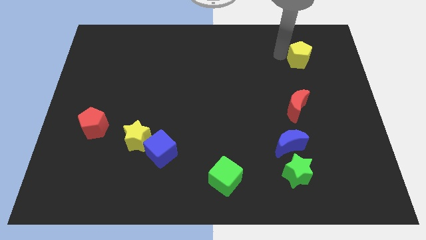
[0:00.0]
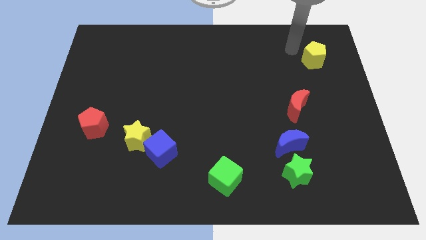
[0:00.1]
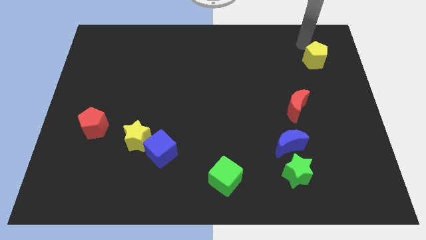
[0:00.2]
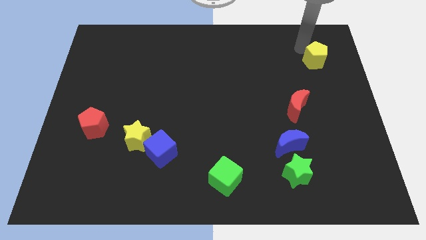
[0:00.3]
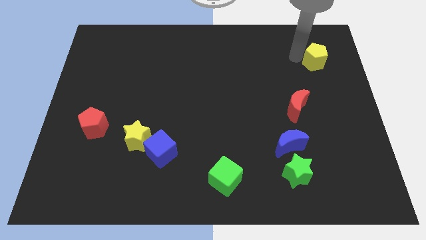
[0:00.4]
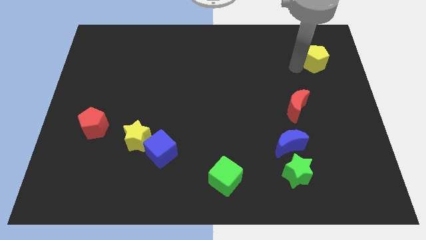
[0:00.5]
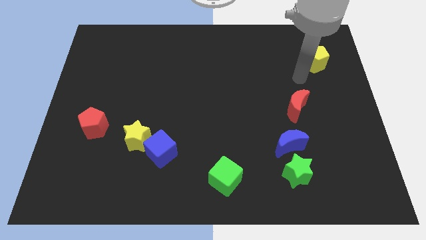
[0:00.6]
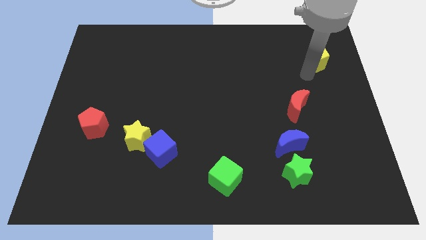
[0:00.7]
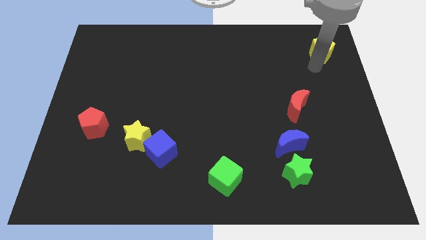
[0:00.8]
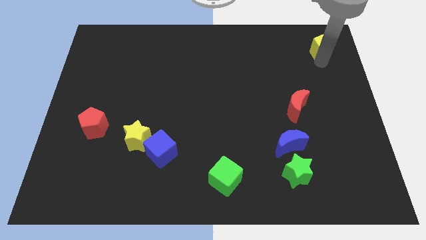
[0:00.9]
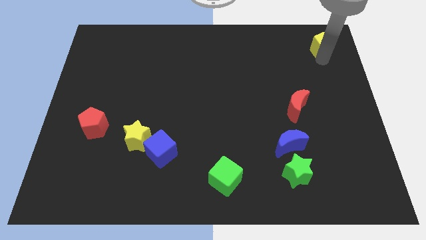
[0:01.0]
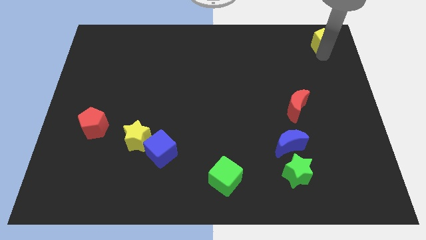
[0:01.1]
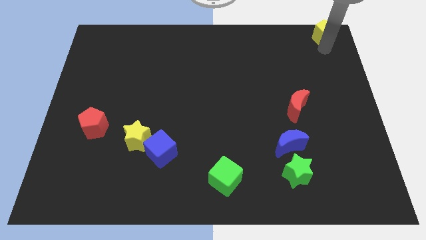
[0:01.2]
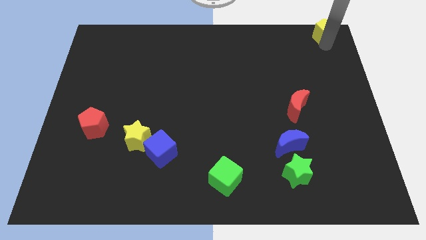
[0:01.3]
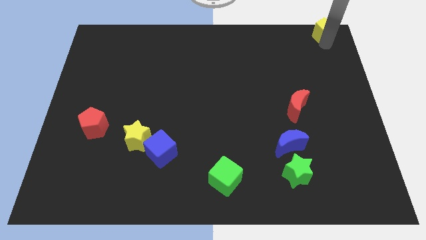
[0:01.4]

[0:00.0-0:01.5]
move yellow pentagon towards right corner of the board

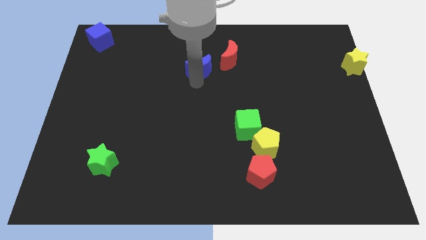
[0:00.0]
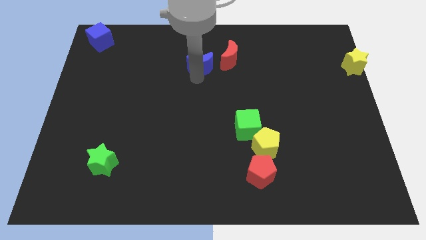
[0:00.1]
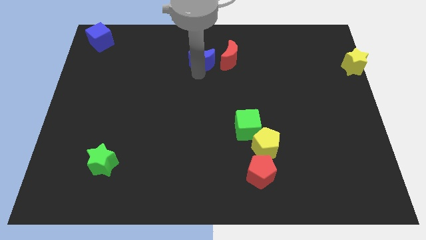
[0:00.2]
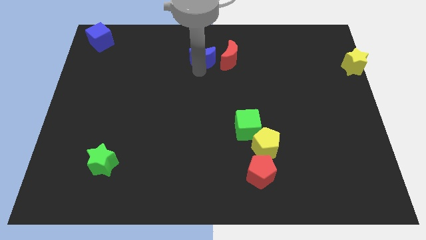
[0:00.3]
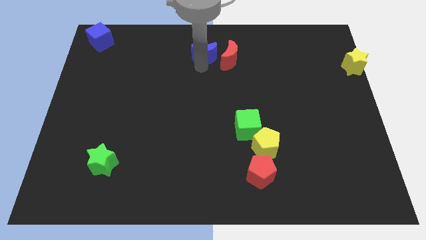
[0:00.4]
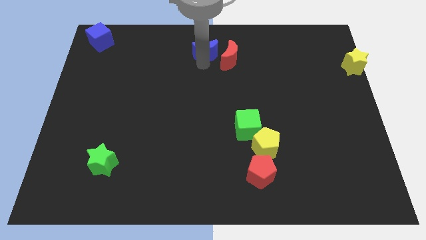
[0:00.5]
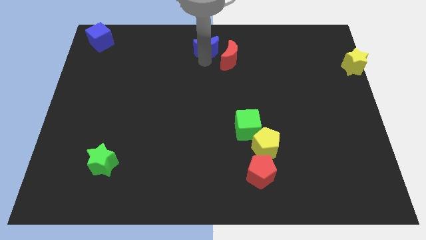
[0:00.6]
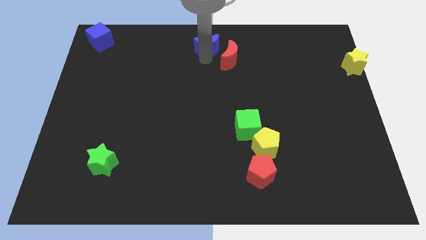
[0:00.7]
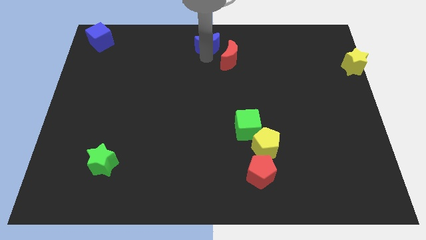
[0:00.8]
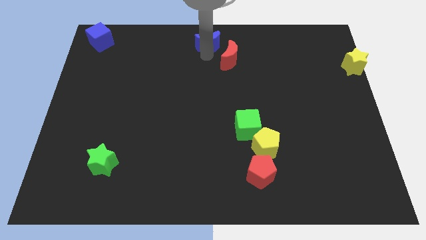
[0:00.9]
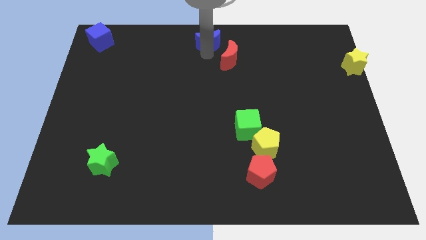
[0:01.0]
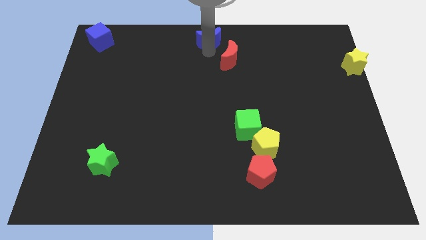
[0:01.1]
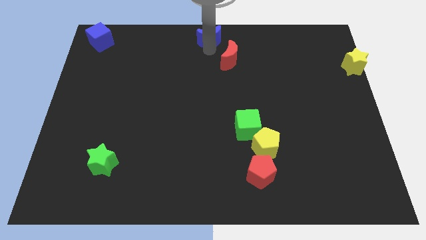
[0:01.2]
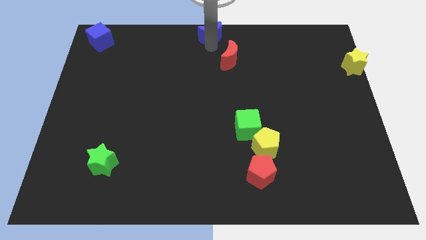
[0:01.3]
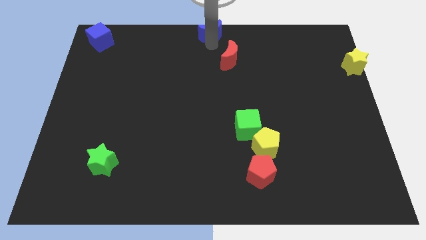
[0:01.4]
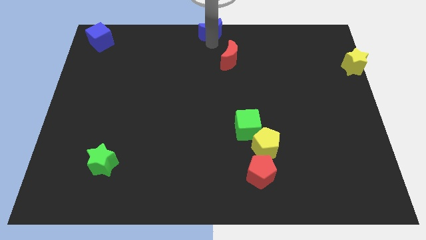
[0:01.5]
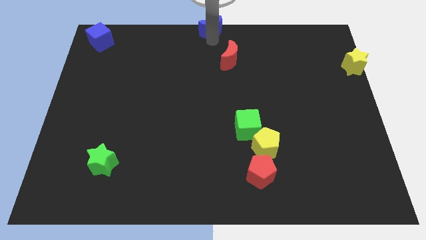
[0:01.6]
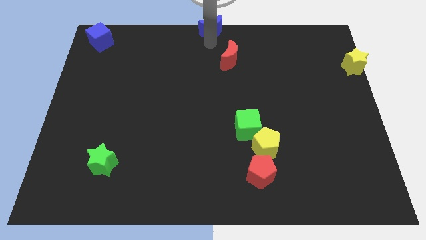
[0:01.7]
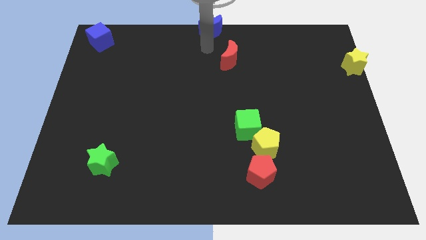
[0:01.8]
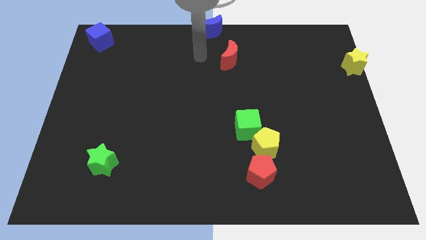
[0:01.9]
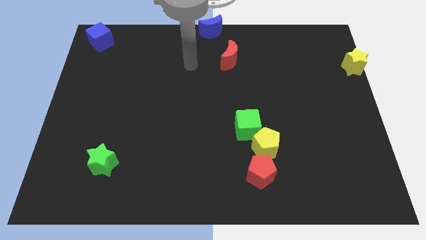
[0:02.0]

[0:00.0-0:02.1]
push blue moon to the top center

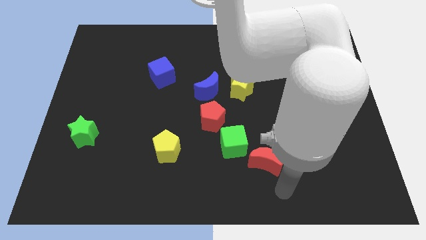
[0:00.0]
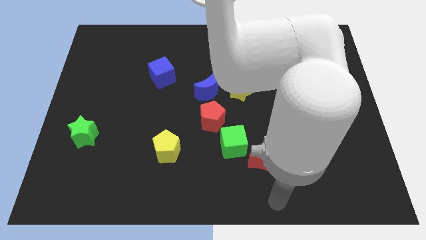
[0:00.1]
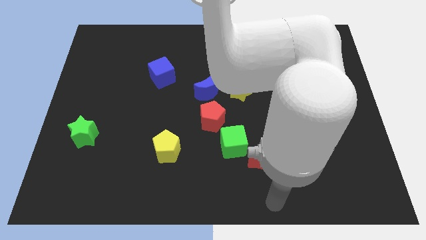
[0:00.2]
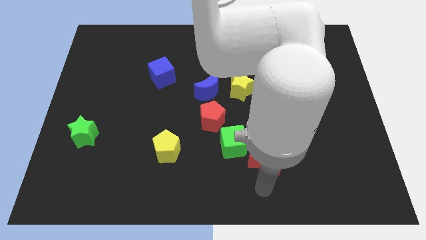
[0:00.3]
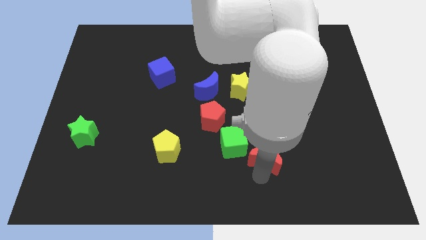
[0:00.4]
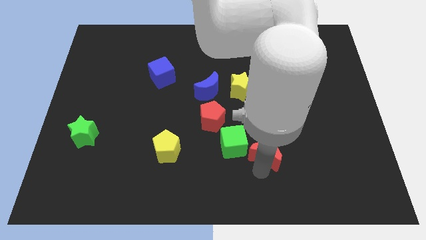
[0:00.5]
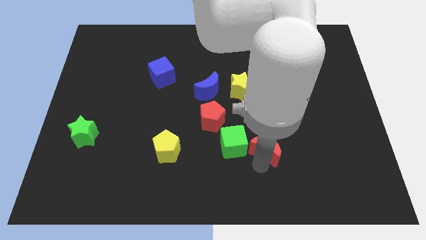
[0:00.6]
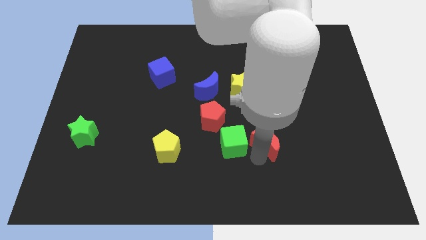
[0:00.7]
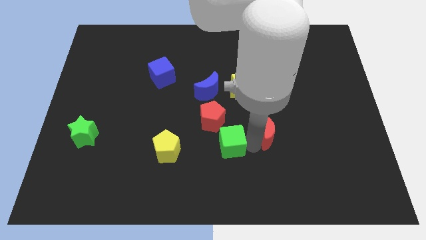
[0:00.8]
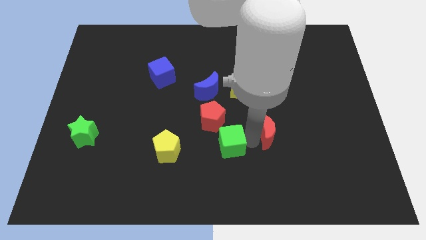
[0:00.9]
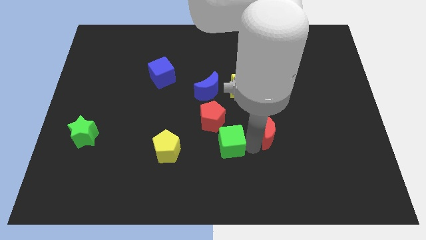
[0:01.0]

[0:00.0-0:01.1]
place your hand in between green cube and red moon

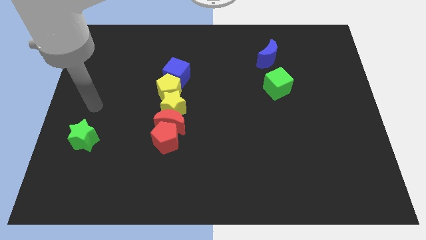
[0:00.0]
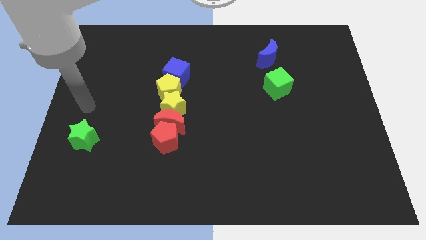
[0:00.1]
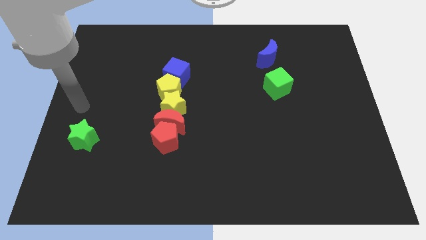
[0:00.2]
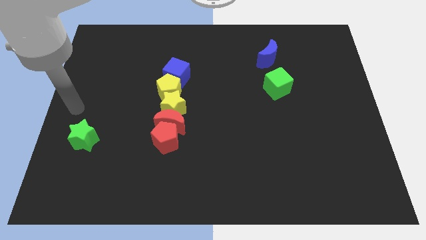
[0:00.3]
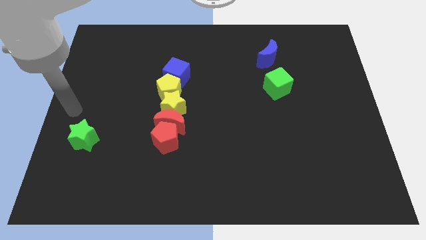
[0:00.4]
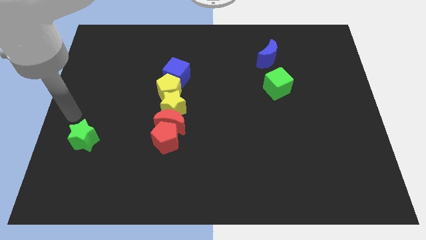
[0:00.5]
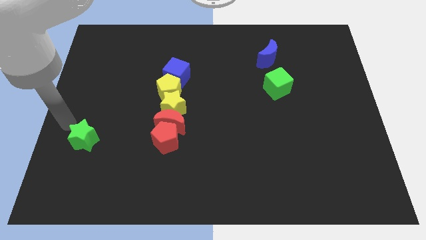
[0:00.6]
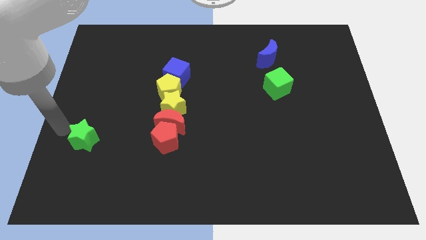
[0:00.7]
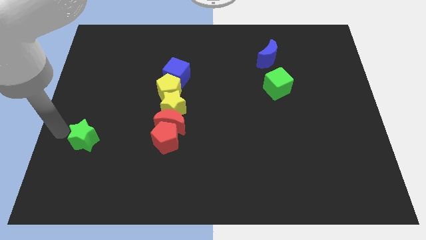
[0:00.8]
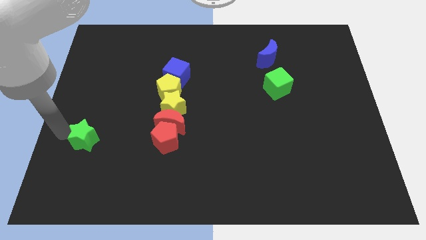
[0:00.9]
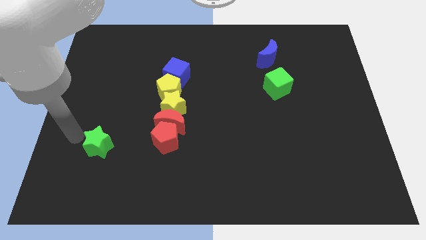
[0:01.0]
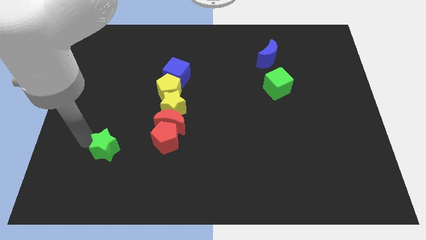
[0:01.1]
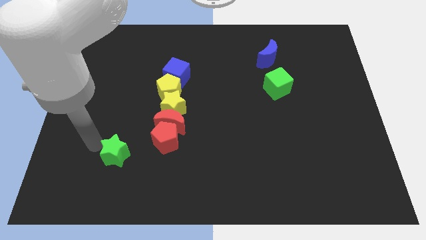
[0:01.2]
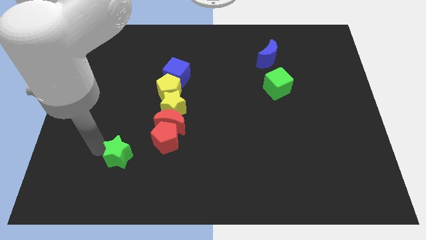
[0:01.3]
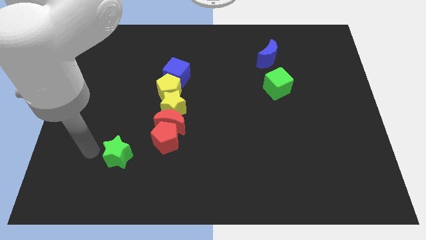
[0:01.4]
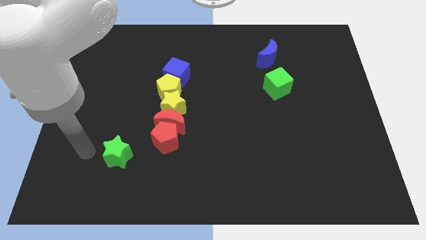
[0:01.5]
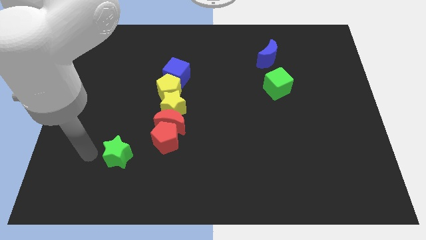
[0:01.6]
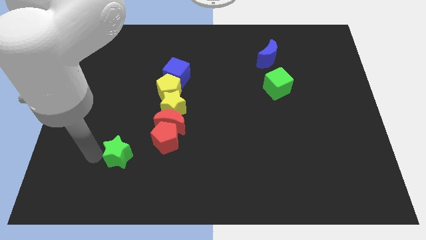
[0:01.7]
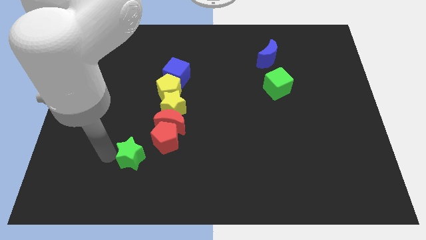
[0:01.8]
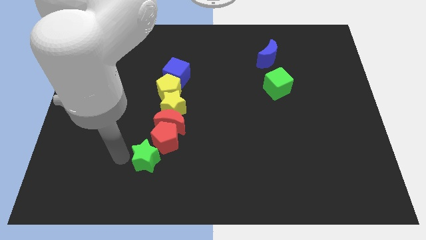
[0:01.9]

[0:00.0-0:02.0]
move green star close to red pentagon

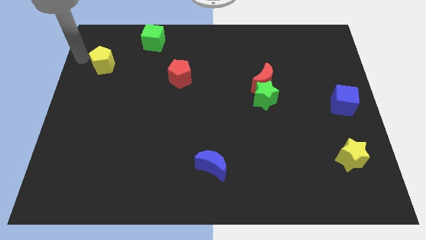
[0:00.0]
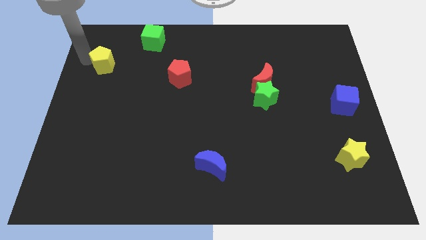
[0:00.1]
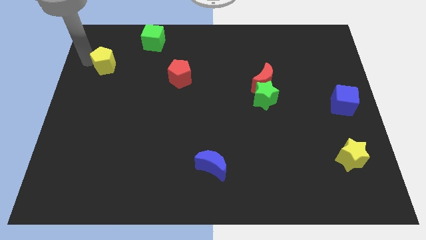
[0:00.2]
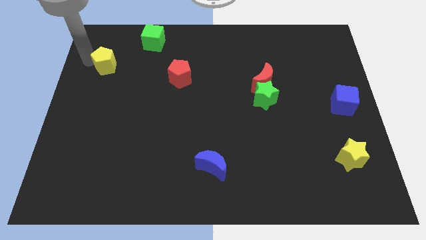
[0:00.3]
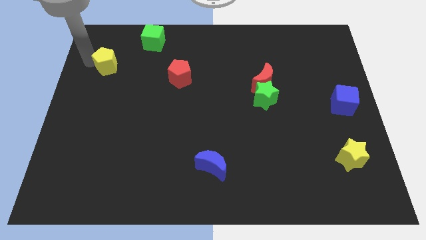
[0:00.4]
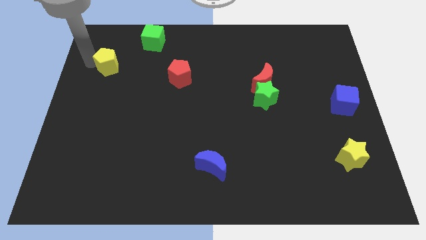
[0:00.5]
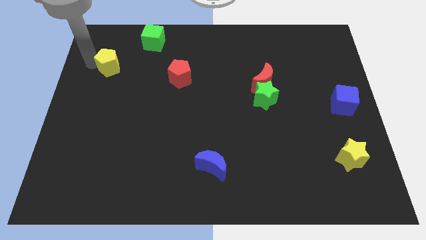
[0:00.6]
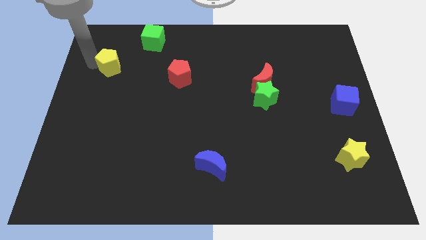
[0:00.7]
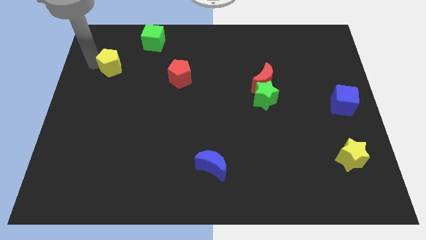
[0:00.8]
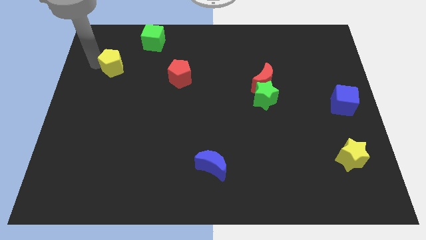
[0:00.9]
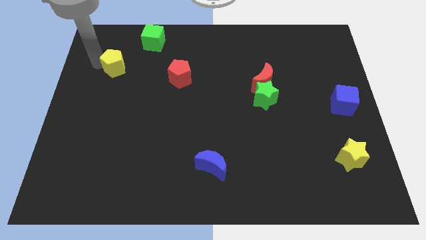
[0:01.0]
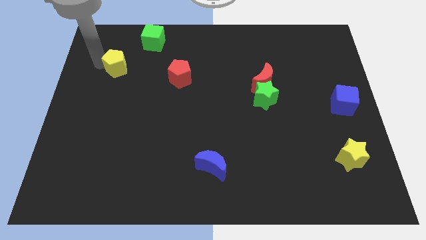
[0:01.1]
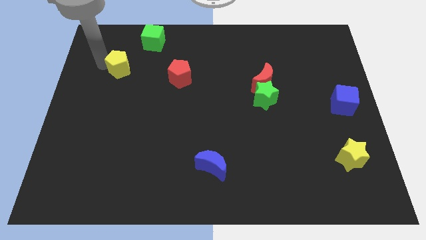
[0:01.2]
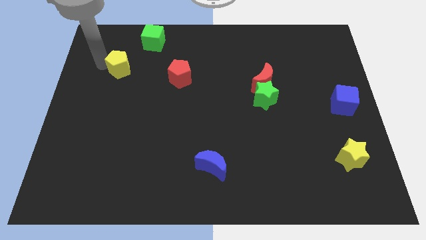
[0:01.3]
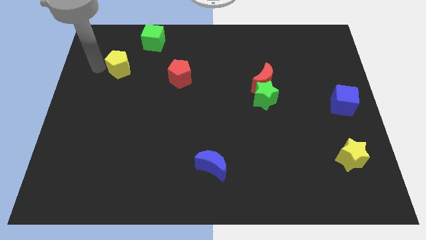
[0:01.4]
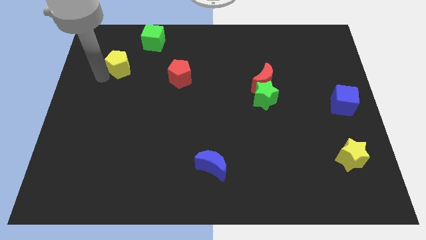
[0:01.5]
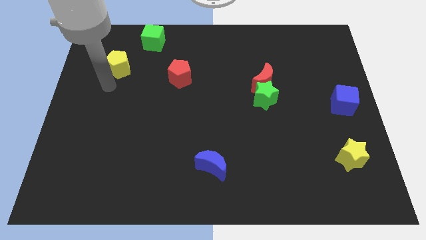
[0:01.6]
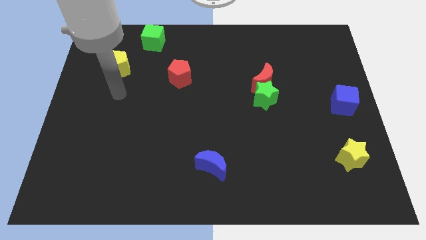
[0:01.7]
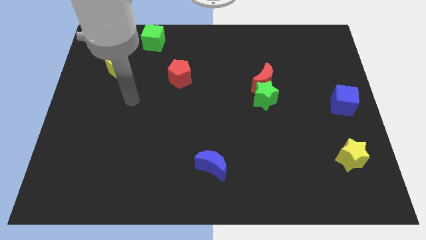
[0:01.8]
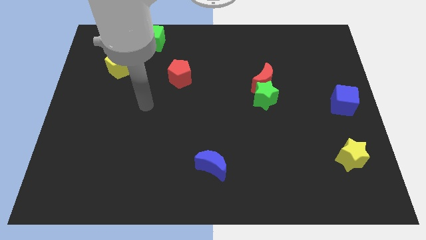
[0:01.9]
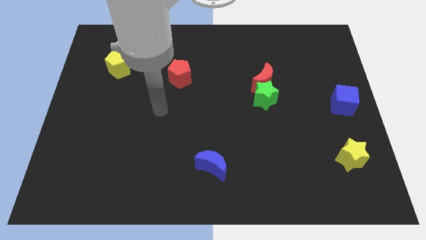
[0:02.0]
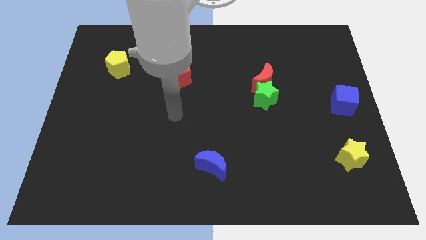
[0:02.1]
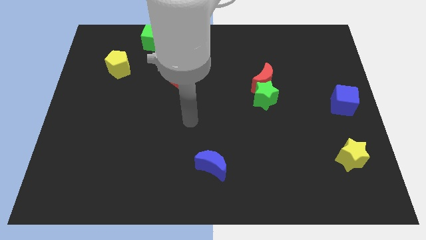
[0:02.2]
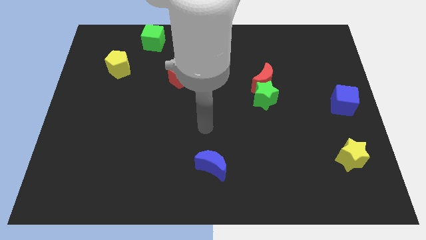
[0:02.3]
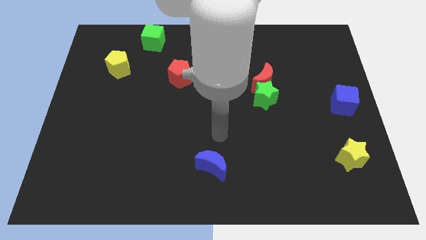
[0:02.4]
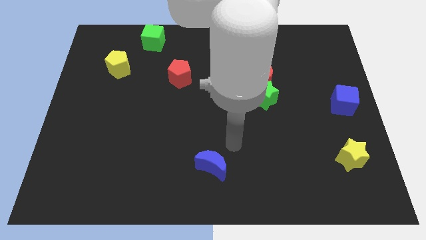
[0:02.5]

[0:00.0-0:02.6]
move the yellow pentagon towards the red pentagon
